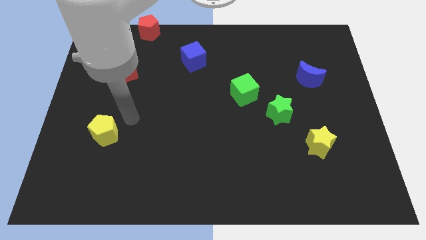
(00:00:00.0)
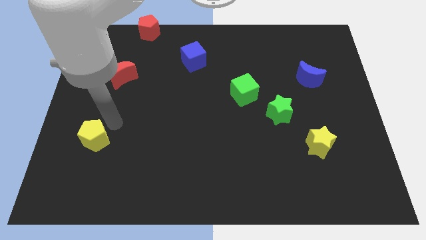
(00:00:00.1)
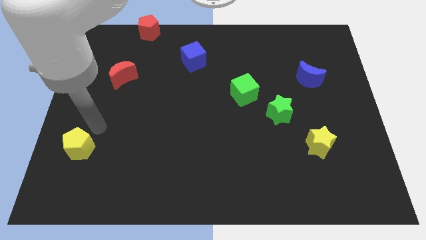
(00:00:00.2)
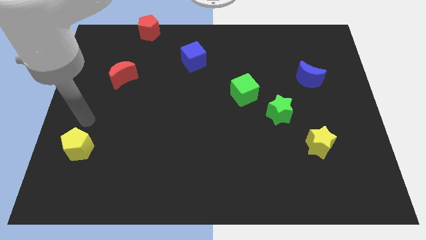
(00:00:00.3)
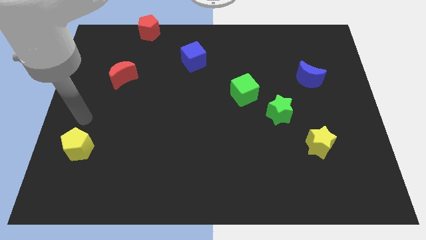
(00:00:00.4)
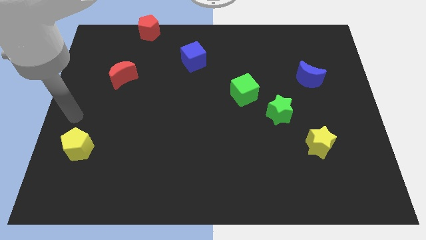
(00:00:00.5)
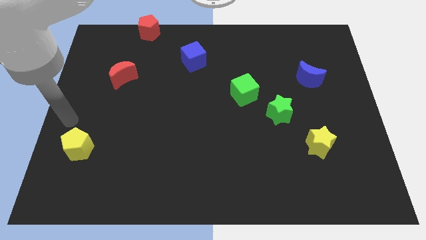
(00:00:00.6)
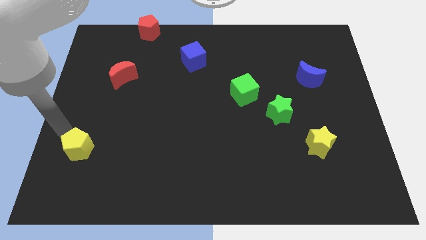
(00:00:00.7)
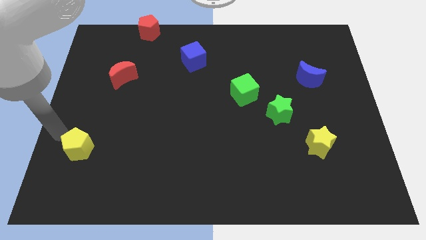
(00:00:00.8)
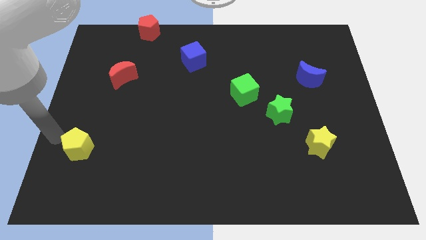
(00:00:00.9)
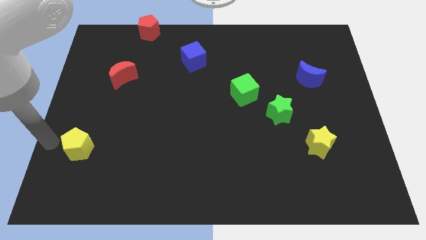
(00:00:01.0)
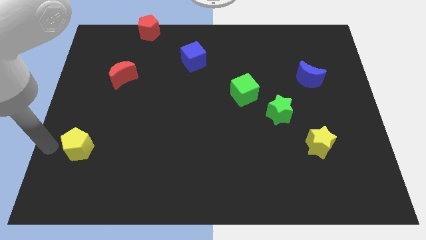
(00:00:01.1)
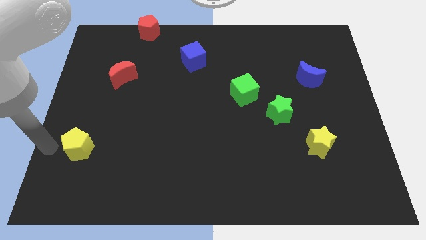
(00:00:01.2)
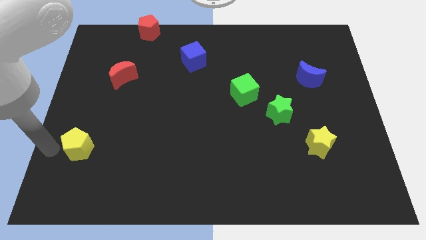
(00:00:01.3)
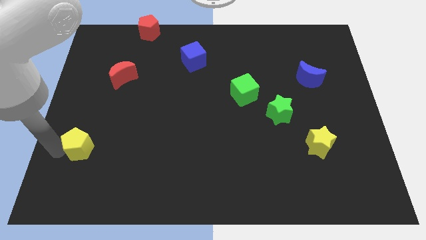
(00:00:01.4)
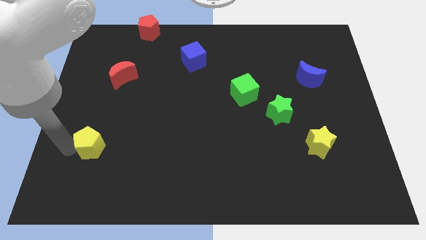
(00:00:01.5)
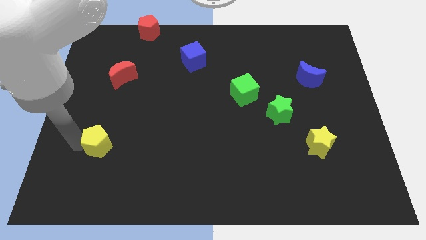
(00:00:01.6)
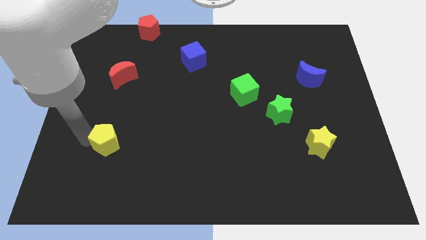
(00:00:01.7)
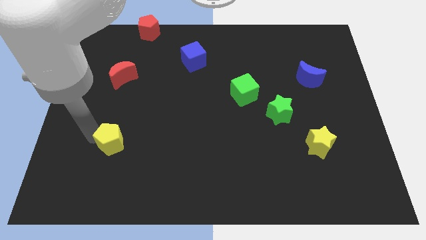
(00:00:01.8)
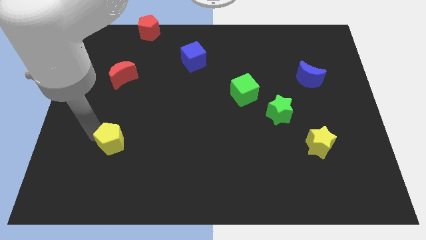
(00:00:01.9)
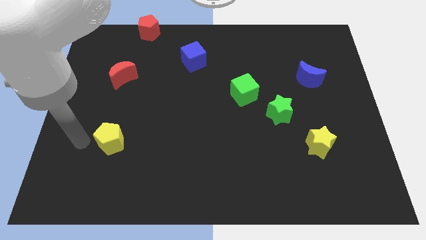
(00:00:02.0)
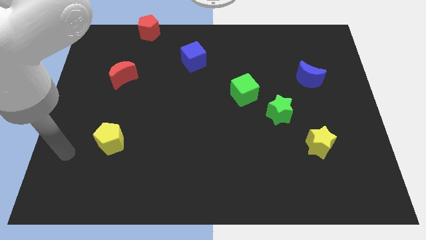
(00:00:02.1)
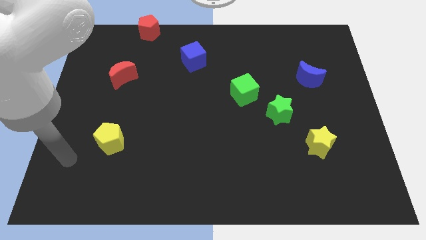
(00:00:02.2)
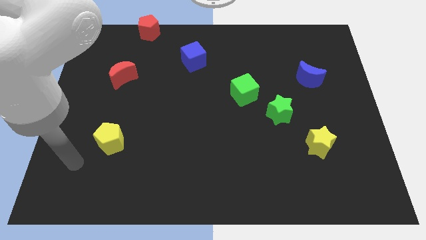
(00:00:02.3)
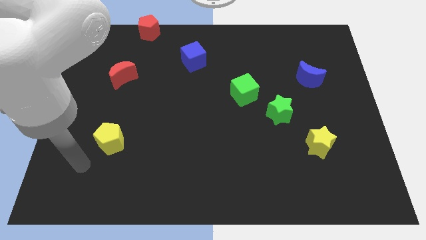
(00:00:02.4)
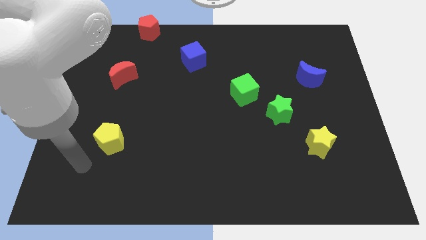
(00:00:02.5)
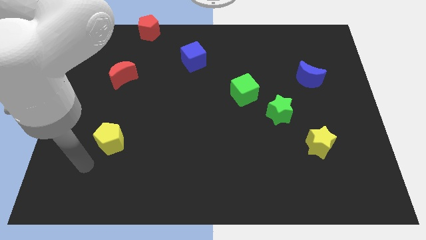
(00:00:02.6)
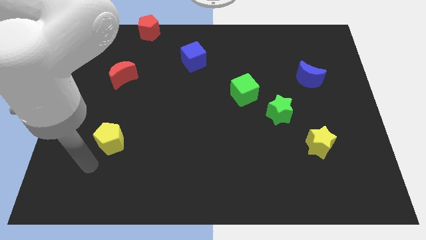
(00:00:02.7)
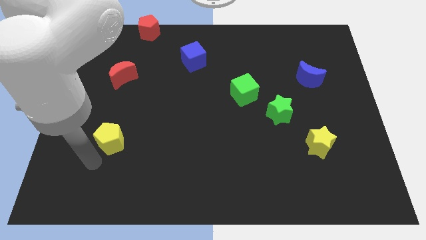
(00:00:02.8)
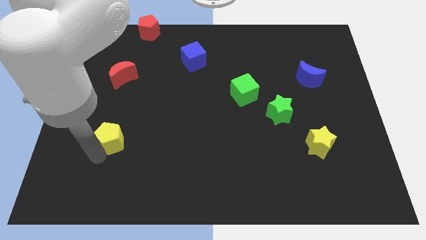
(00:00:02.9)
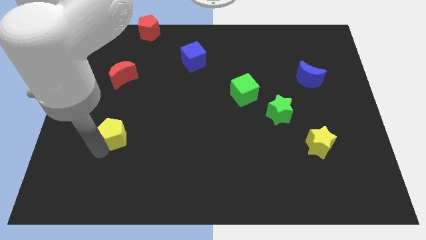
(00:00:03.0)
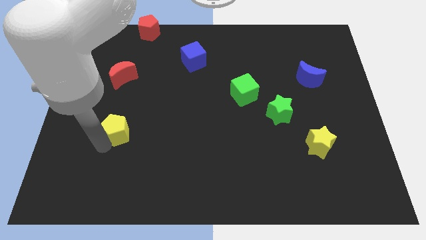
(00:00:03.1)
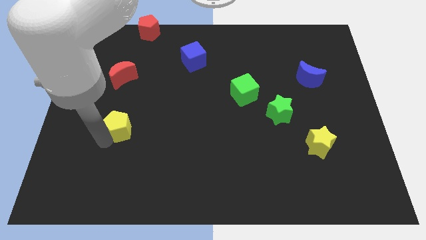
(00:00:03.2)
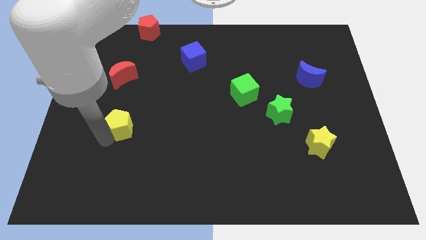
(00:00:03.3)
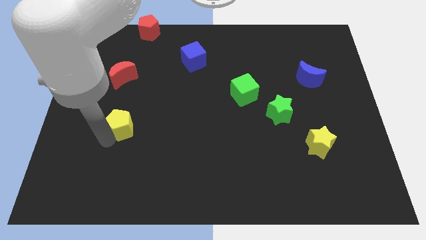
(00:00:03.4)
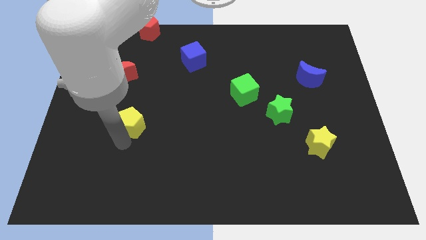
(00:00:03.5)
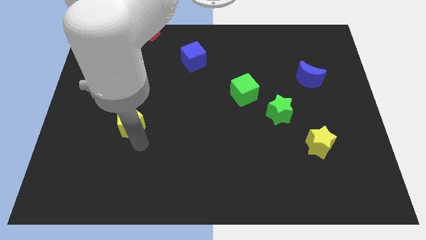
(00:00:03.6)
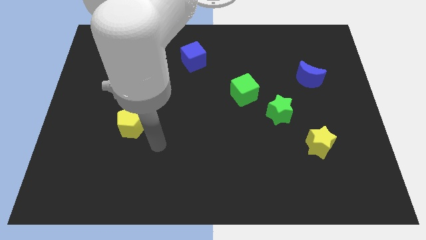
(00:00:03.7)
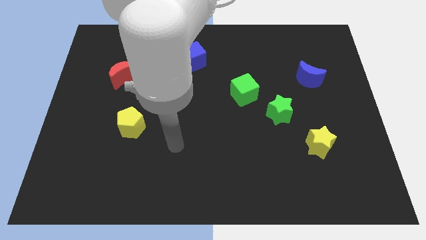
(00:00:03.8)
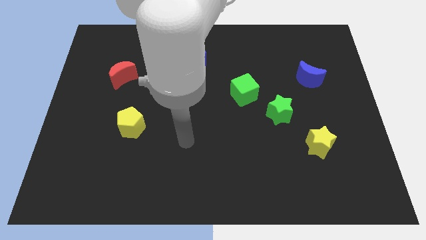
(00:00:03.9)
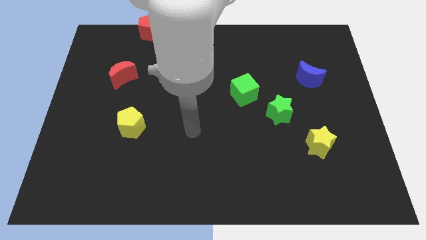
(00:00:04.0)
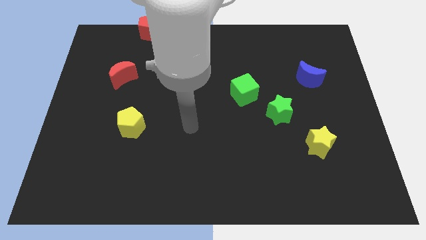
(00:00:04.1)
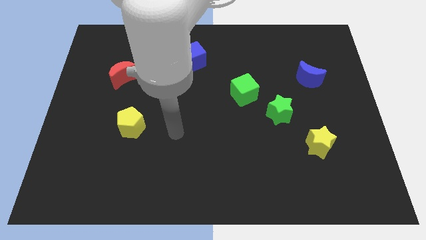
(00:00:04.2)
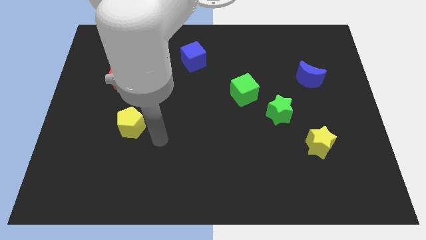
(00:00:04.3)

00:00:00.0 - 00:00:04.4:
place the yellow pentagon to the bottom of red moon

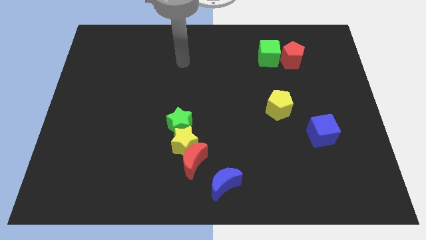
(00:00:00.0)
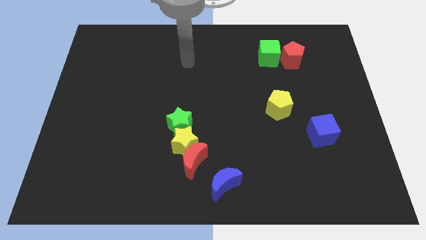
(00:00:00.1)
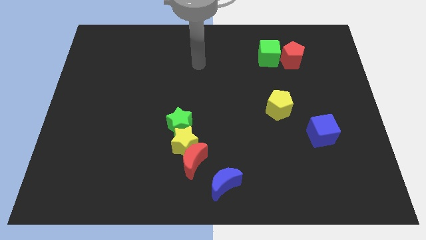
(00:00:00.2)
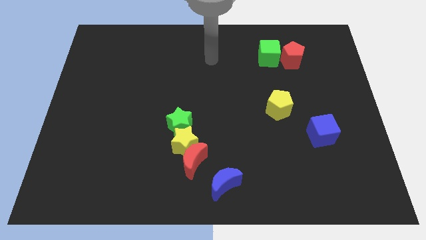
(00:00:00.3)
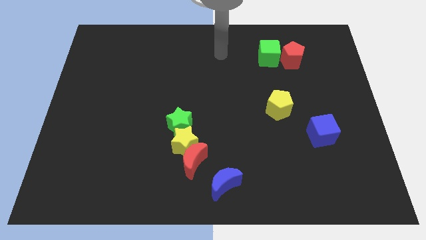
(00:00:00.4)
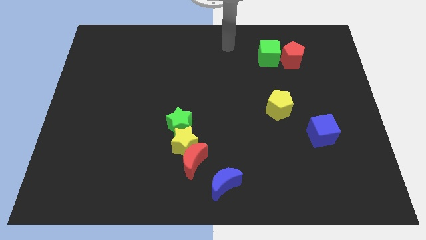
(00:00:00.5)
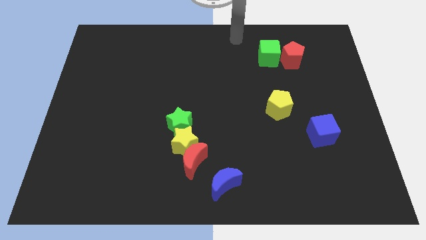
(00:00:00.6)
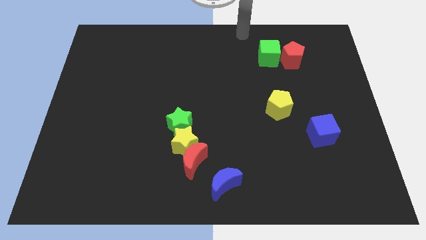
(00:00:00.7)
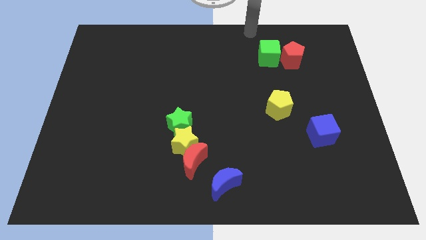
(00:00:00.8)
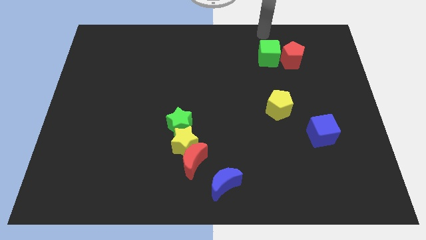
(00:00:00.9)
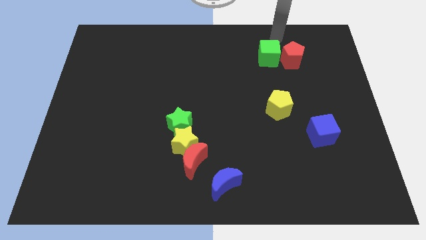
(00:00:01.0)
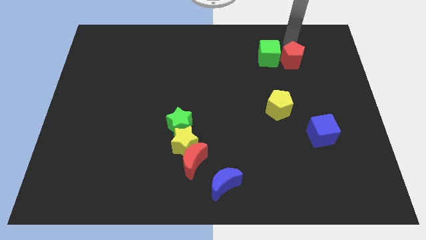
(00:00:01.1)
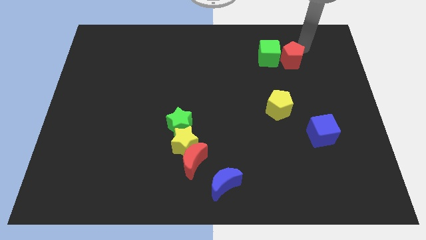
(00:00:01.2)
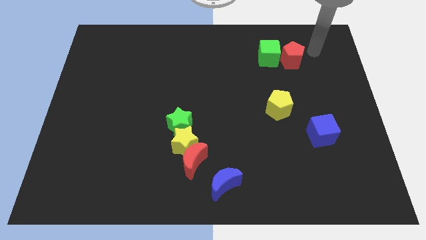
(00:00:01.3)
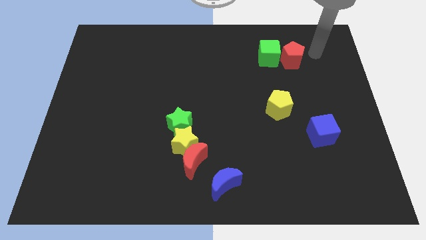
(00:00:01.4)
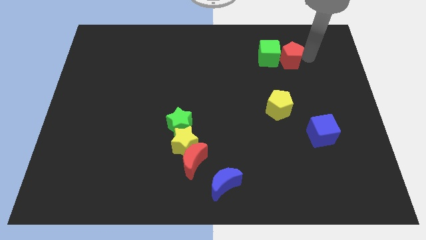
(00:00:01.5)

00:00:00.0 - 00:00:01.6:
point the arm to the right of the red pentagon

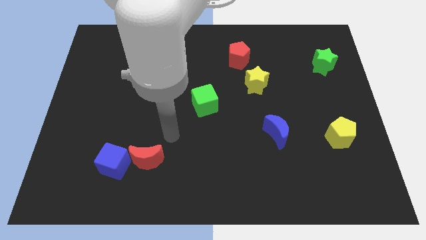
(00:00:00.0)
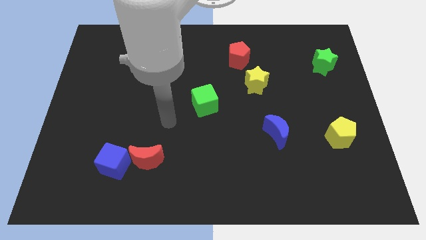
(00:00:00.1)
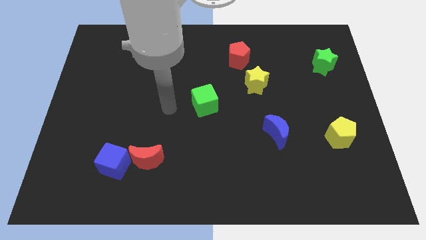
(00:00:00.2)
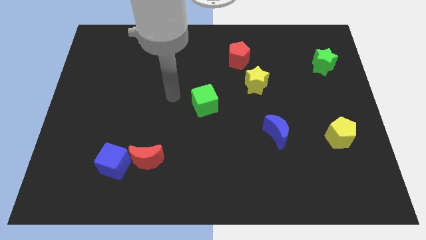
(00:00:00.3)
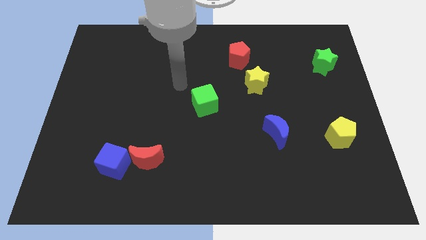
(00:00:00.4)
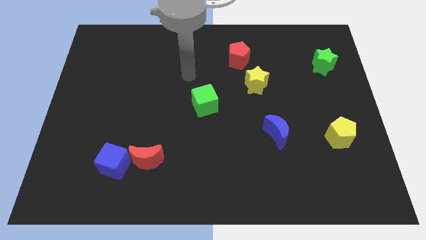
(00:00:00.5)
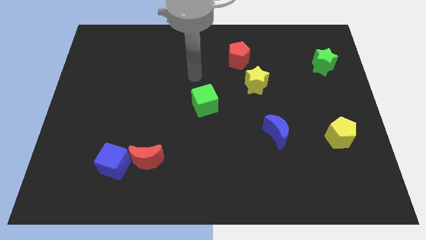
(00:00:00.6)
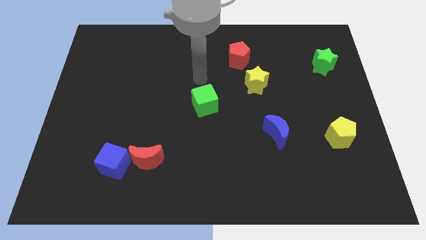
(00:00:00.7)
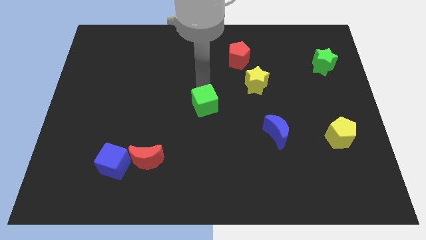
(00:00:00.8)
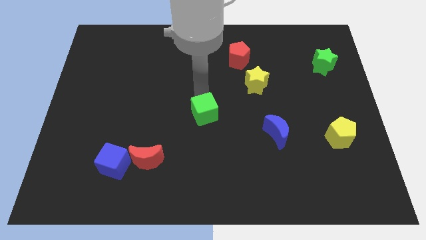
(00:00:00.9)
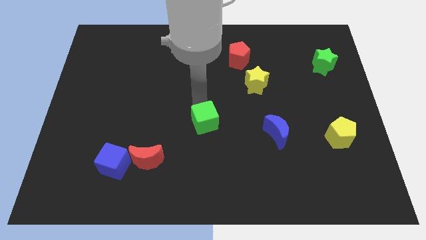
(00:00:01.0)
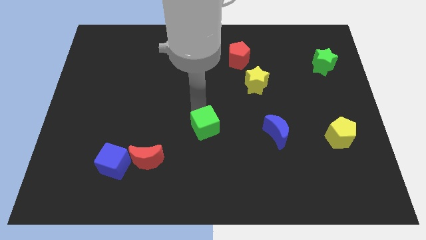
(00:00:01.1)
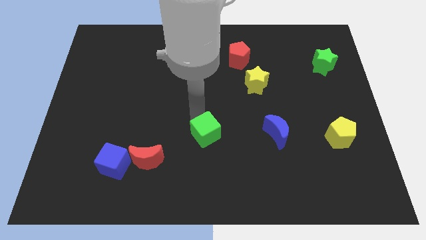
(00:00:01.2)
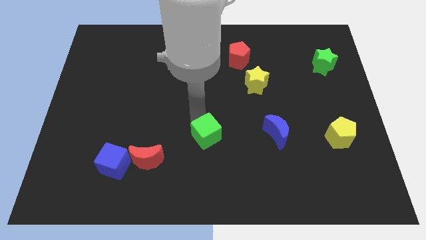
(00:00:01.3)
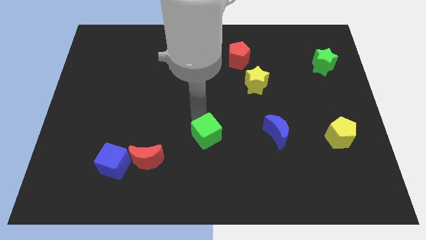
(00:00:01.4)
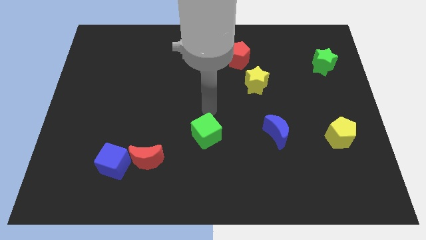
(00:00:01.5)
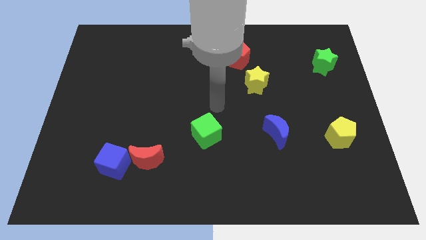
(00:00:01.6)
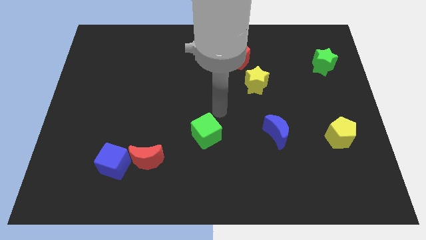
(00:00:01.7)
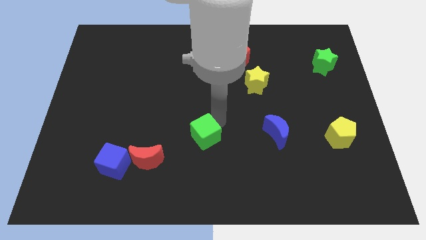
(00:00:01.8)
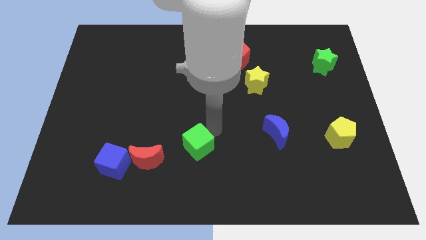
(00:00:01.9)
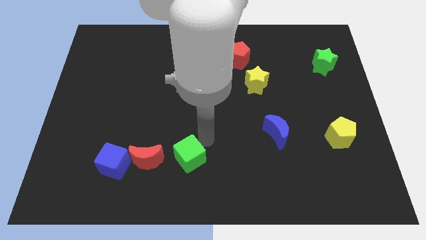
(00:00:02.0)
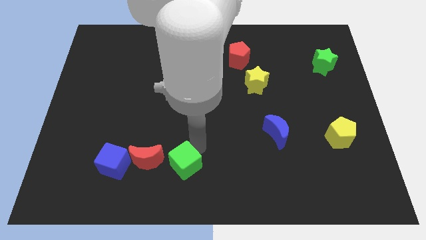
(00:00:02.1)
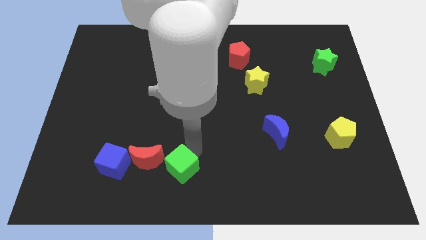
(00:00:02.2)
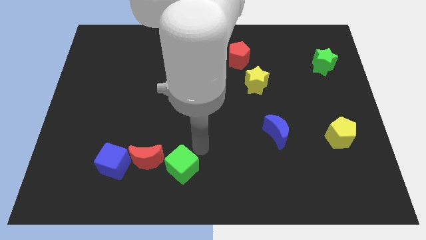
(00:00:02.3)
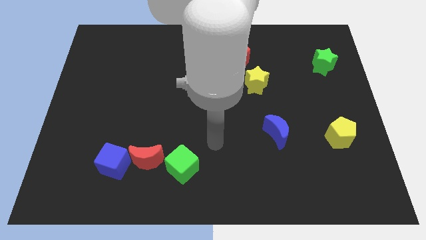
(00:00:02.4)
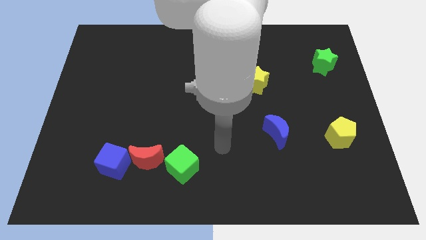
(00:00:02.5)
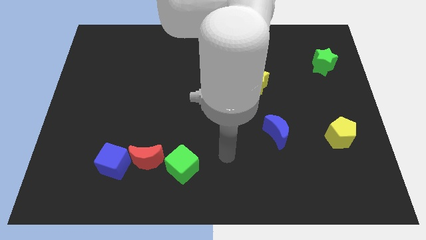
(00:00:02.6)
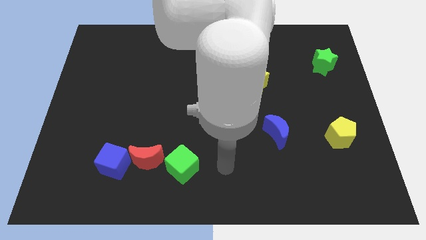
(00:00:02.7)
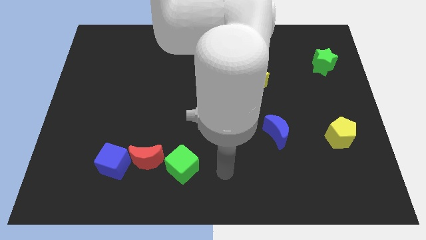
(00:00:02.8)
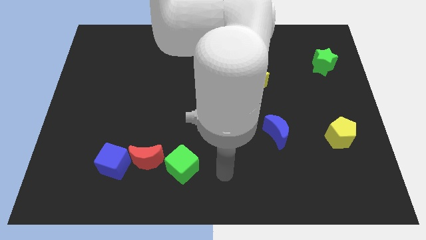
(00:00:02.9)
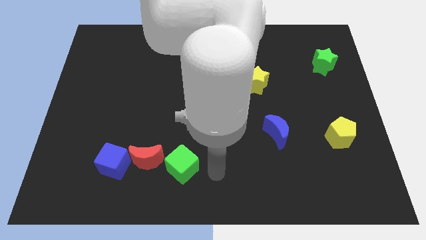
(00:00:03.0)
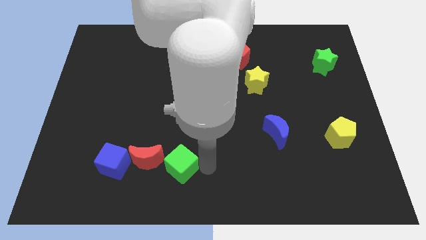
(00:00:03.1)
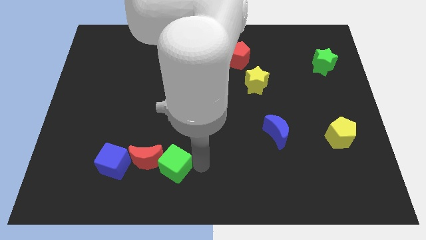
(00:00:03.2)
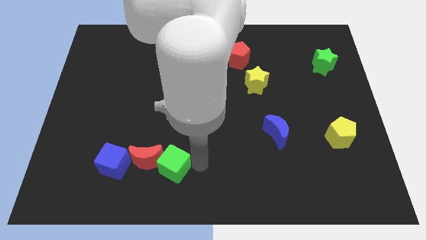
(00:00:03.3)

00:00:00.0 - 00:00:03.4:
move the green cube to the right side of the red crescent
